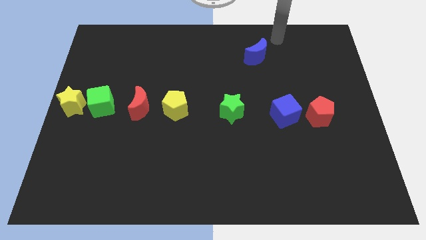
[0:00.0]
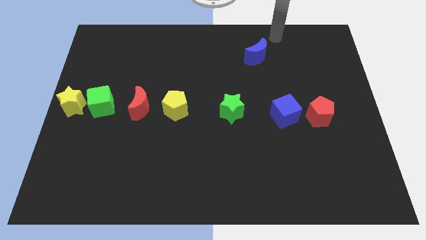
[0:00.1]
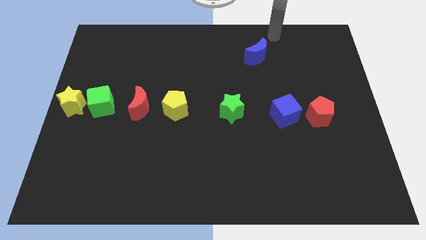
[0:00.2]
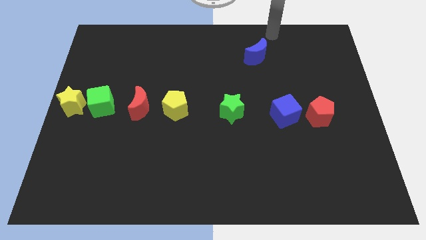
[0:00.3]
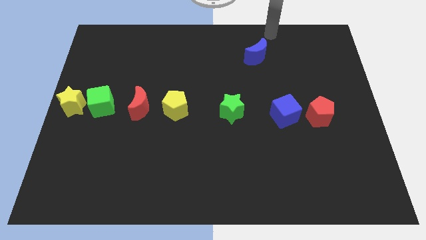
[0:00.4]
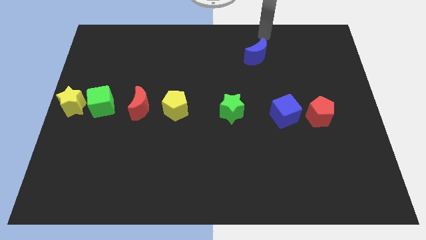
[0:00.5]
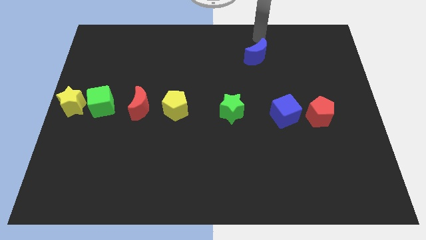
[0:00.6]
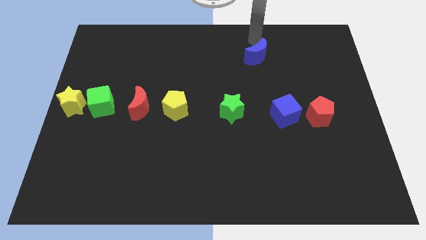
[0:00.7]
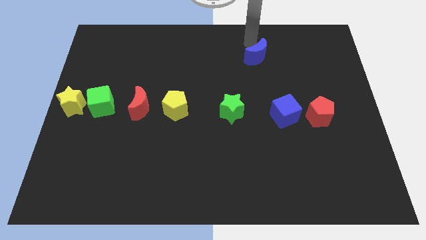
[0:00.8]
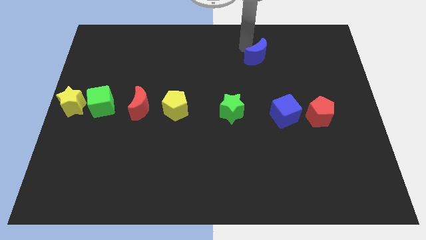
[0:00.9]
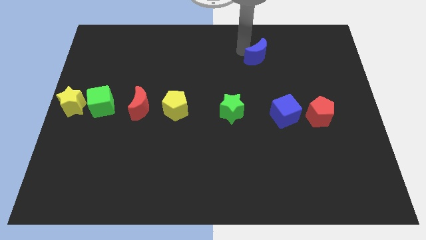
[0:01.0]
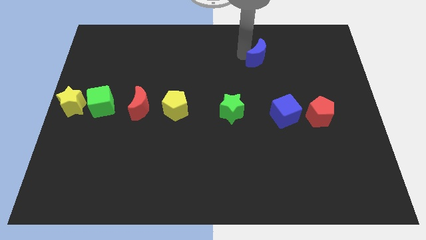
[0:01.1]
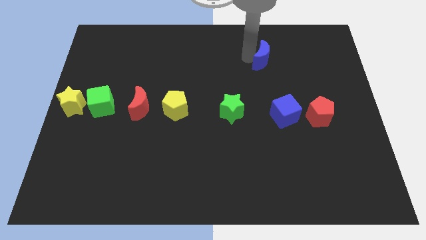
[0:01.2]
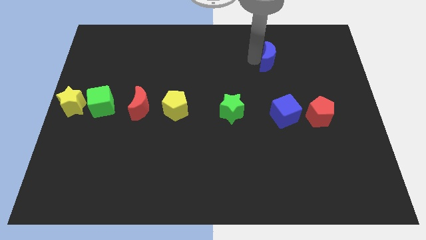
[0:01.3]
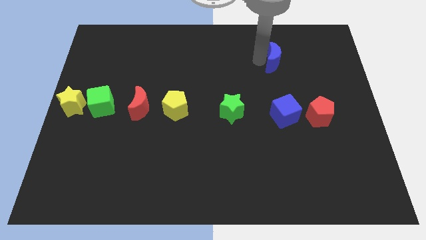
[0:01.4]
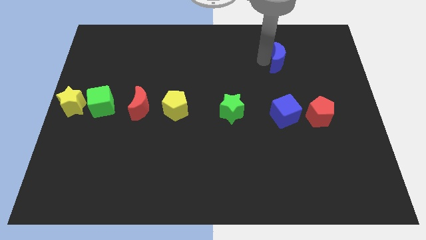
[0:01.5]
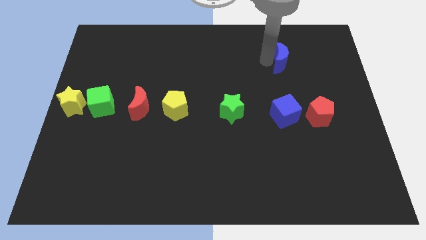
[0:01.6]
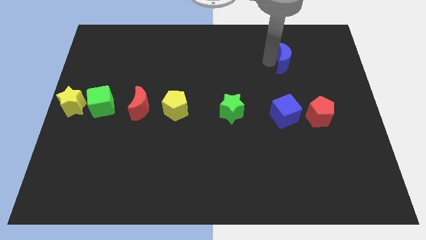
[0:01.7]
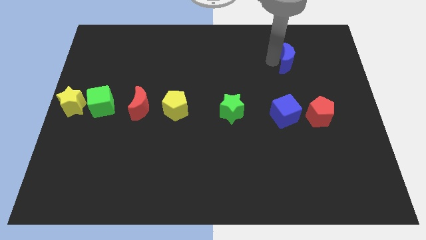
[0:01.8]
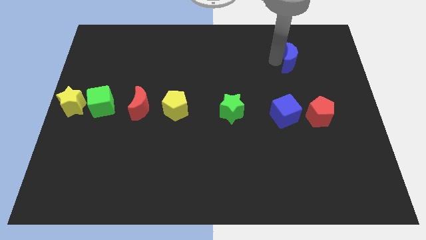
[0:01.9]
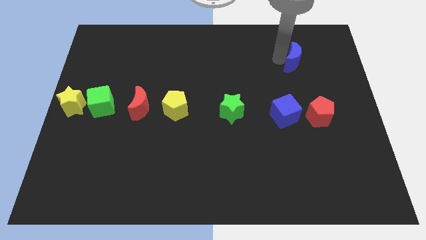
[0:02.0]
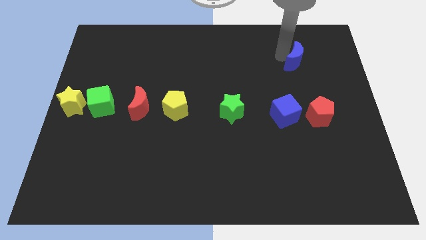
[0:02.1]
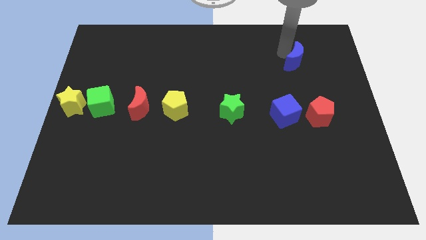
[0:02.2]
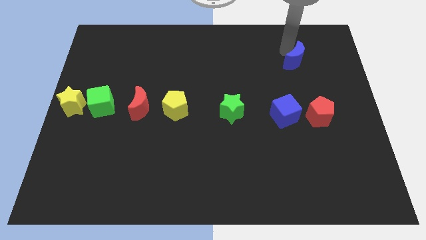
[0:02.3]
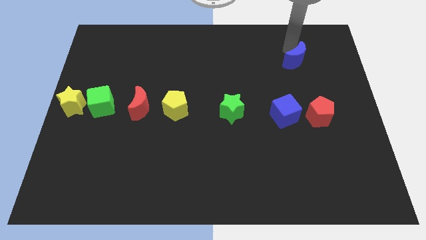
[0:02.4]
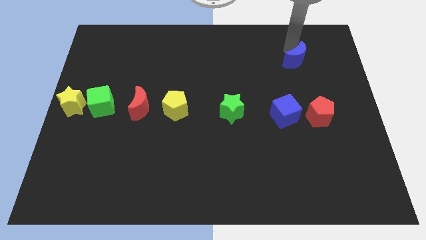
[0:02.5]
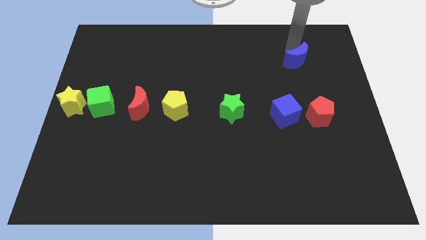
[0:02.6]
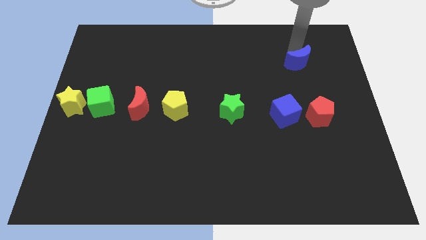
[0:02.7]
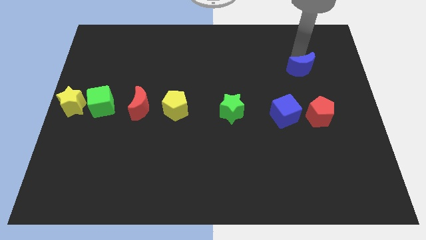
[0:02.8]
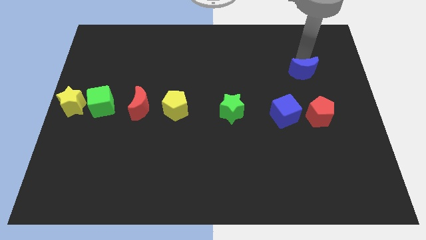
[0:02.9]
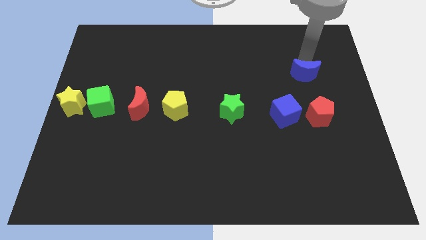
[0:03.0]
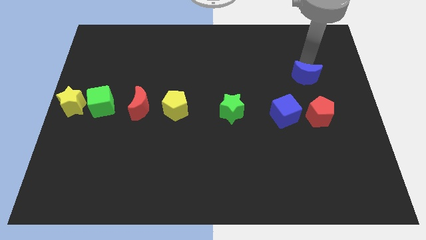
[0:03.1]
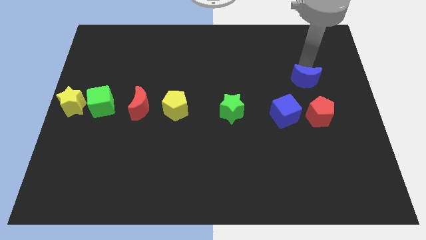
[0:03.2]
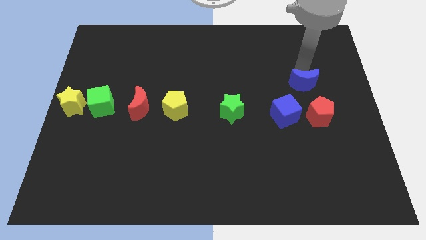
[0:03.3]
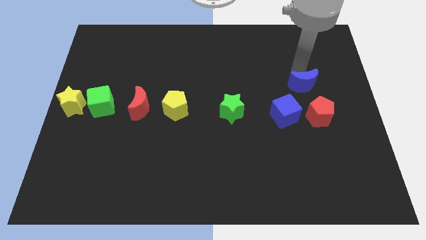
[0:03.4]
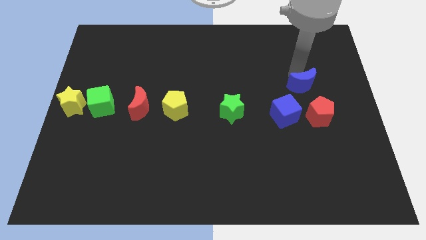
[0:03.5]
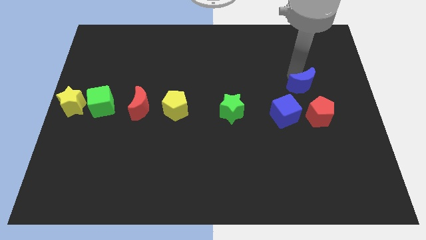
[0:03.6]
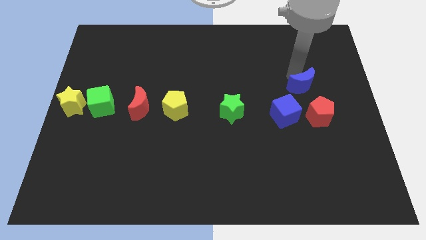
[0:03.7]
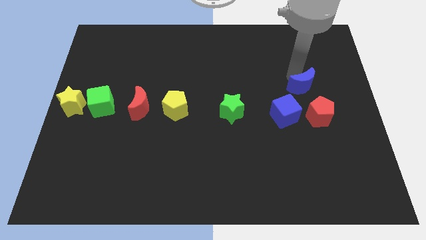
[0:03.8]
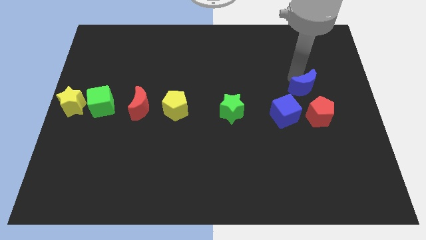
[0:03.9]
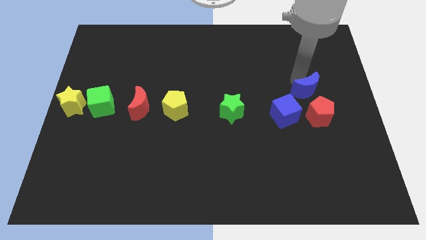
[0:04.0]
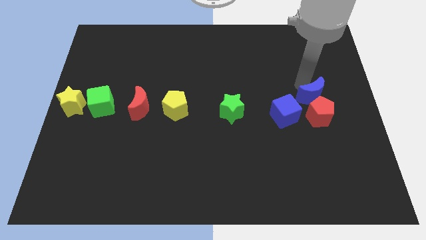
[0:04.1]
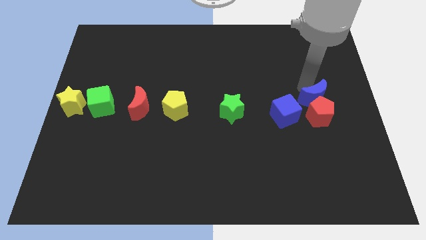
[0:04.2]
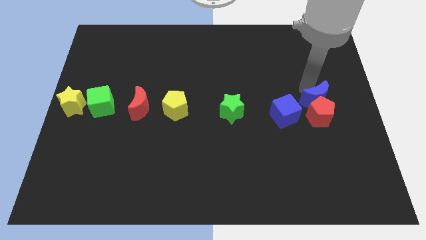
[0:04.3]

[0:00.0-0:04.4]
push the blue crescent to the top of the red pentagon

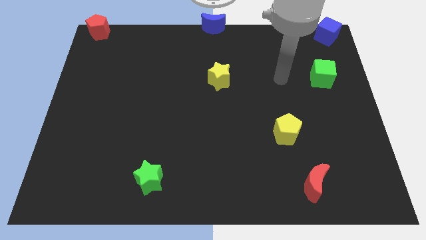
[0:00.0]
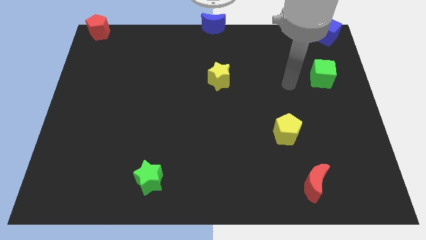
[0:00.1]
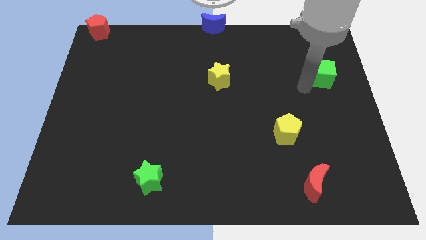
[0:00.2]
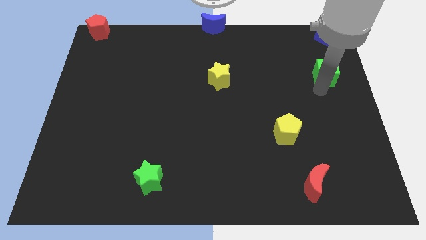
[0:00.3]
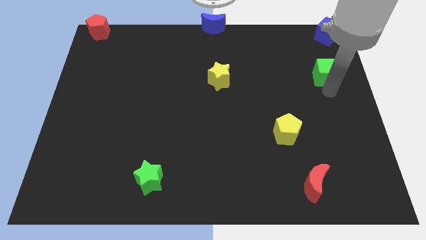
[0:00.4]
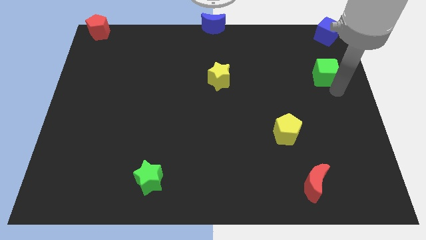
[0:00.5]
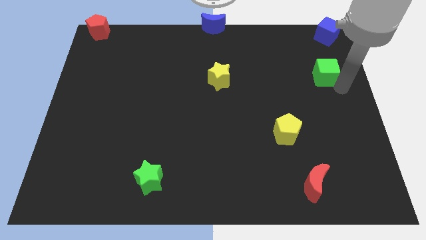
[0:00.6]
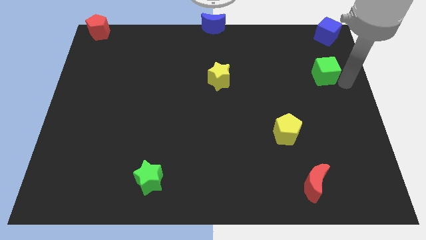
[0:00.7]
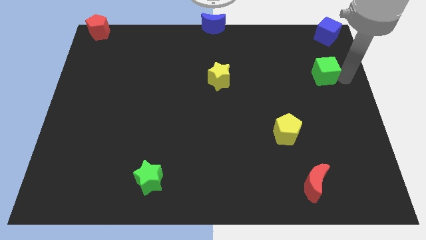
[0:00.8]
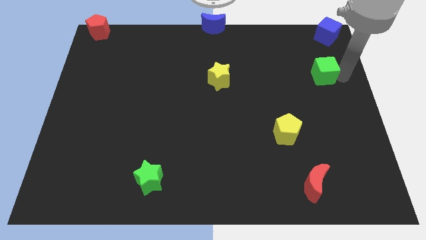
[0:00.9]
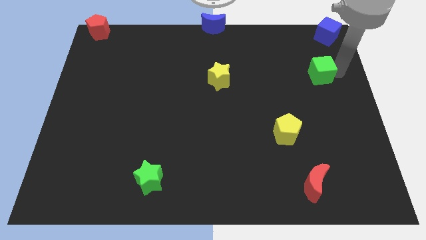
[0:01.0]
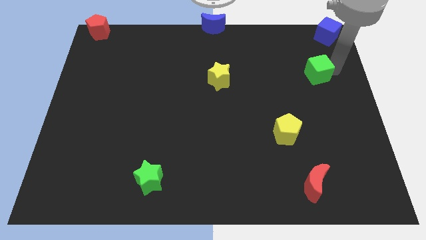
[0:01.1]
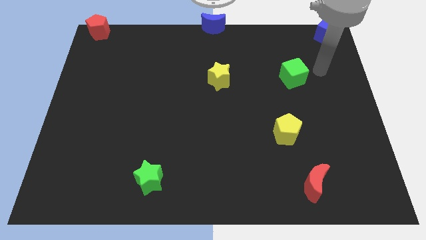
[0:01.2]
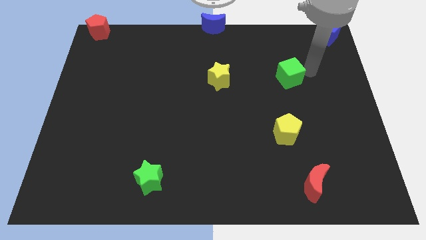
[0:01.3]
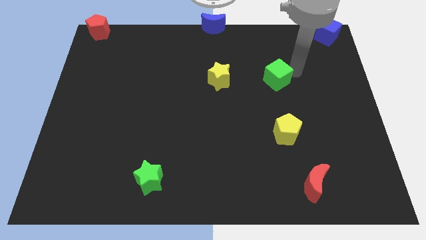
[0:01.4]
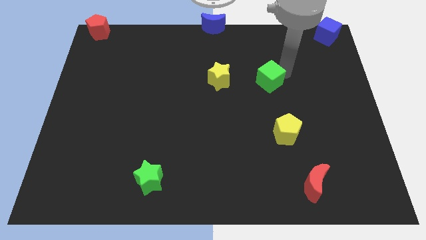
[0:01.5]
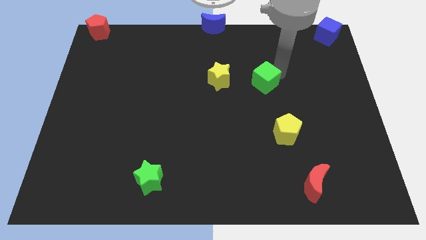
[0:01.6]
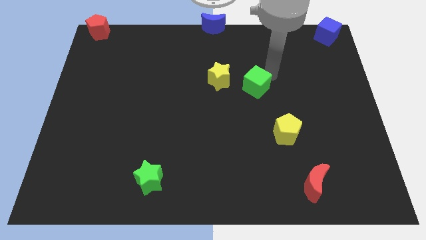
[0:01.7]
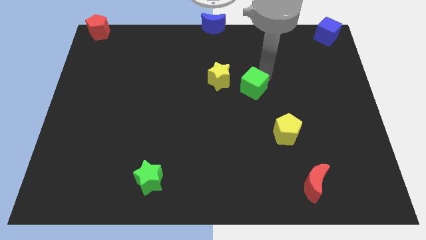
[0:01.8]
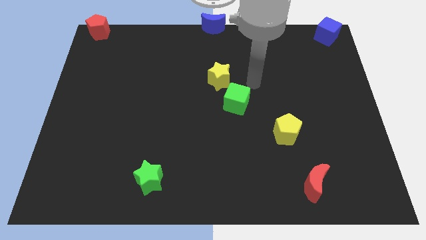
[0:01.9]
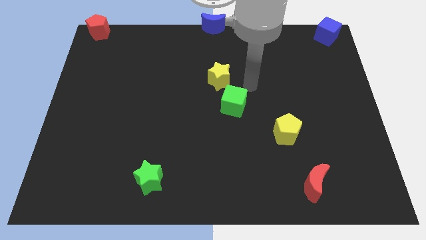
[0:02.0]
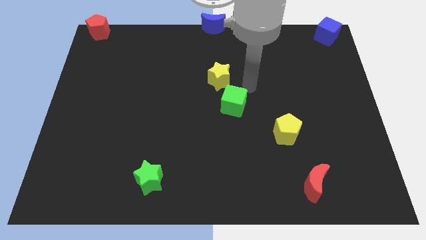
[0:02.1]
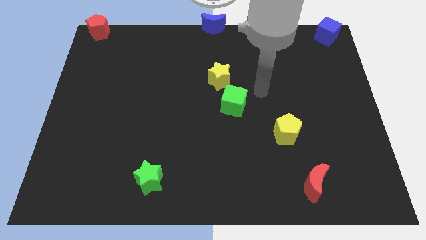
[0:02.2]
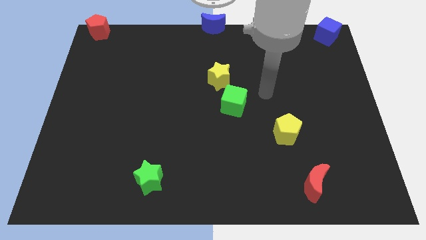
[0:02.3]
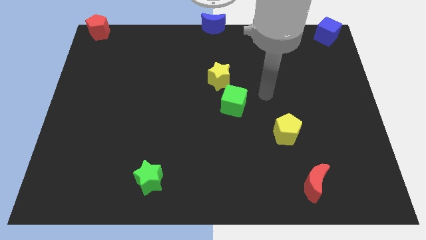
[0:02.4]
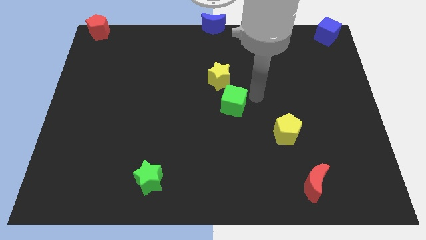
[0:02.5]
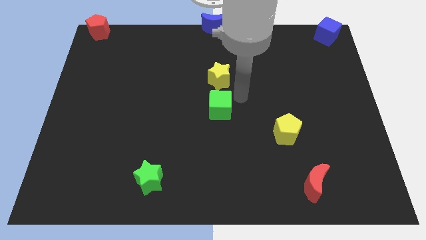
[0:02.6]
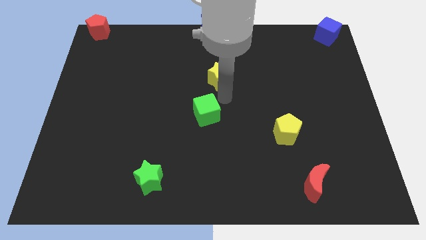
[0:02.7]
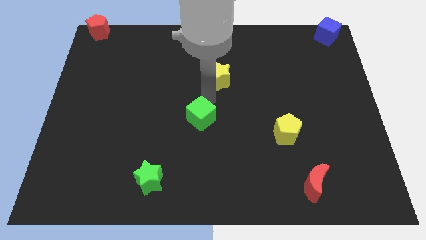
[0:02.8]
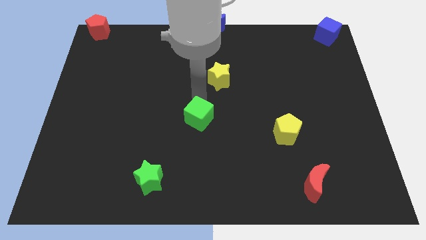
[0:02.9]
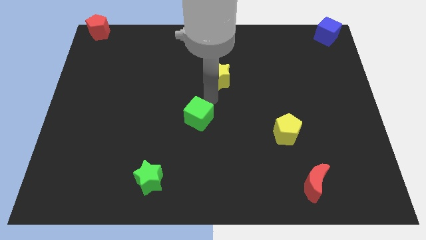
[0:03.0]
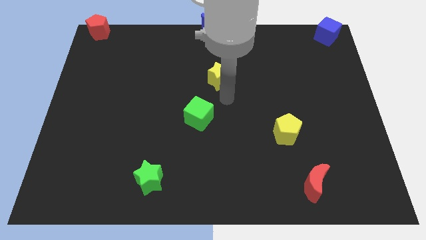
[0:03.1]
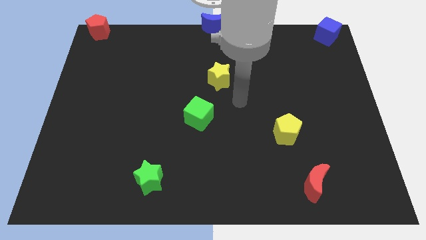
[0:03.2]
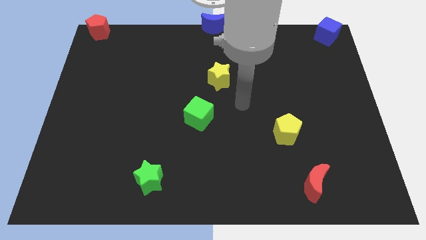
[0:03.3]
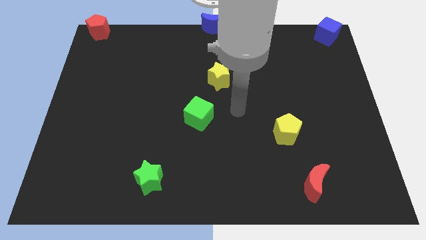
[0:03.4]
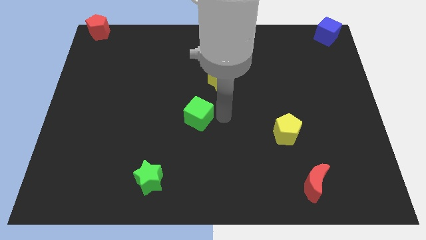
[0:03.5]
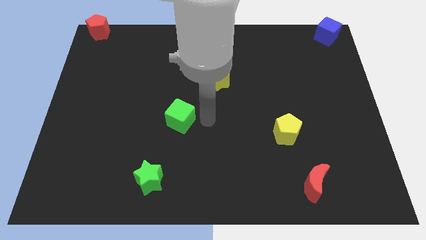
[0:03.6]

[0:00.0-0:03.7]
move the green cube diagonally in between the yellow star green star

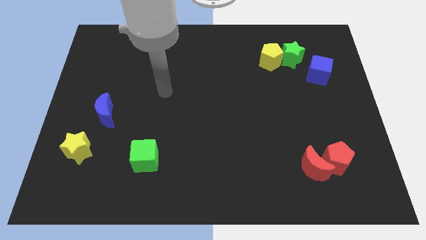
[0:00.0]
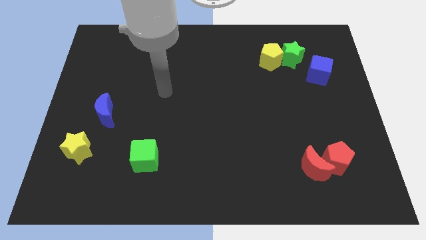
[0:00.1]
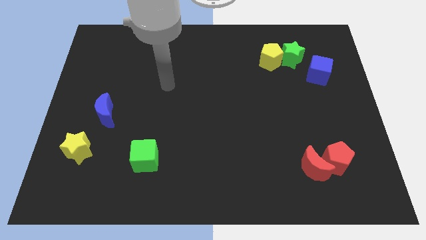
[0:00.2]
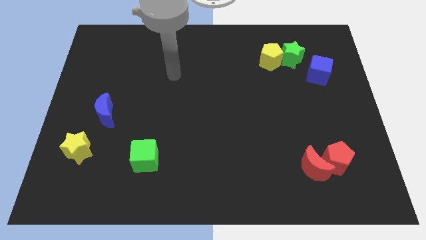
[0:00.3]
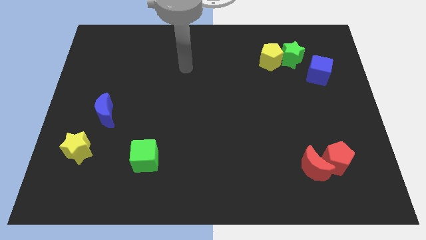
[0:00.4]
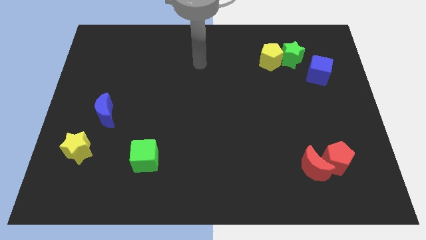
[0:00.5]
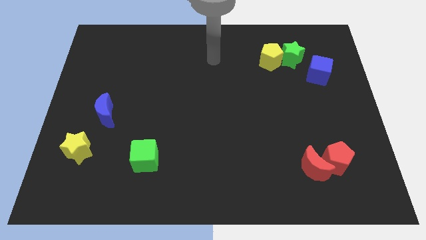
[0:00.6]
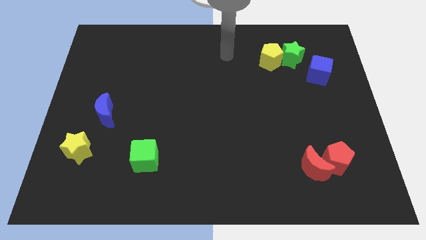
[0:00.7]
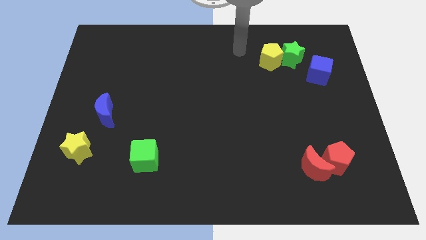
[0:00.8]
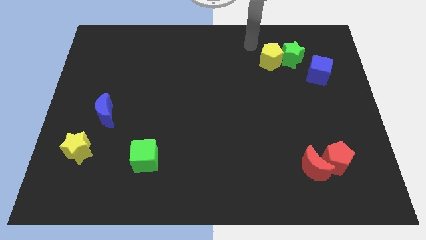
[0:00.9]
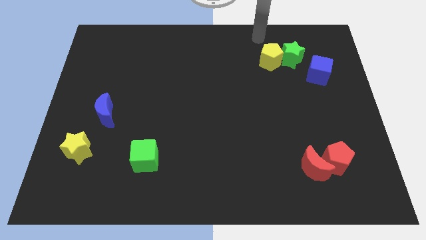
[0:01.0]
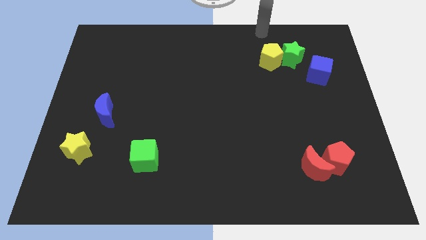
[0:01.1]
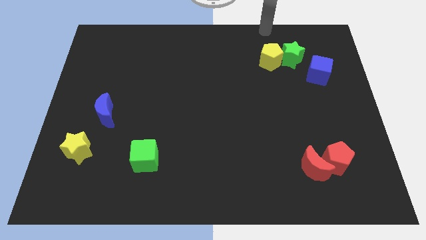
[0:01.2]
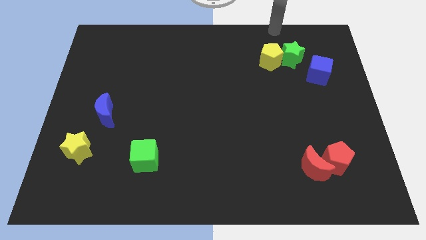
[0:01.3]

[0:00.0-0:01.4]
place your arm above the yellow pentagon
